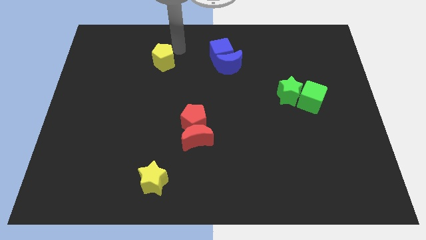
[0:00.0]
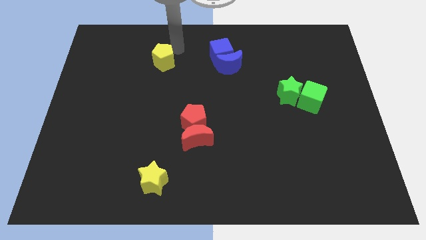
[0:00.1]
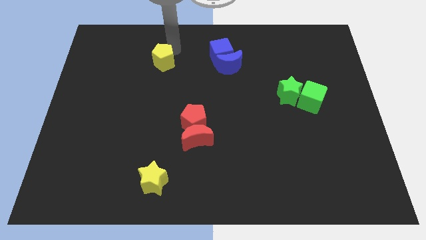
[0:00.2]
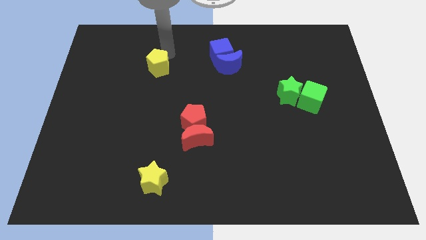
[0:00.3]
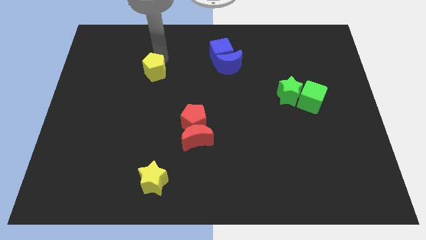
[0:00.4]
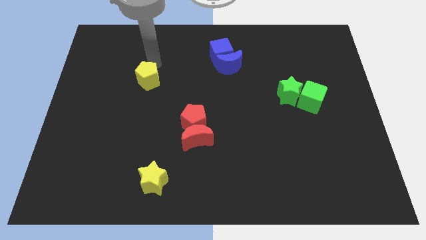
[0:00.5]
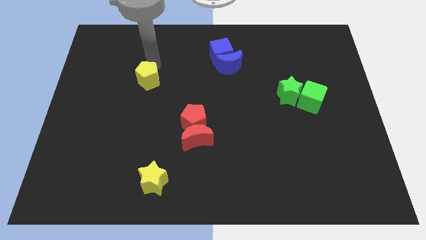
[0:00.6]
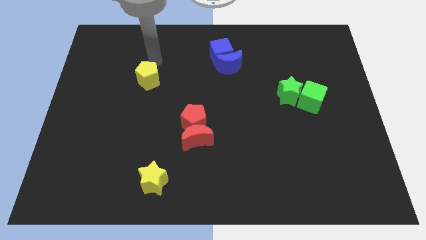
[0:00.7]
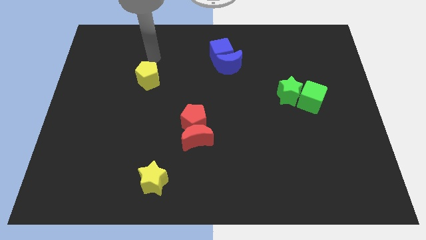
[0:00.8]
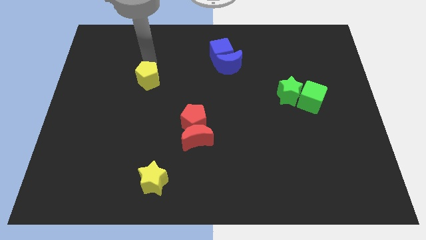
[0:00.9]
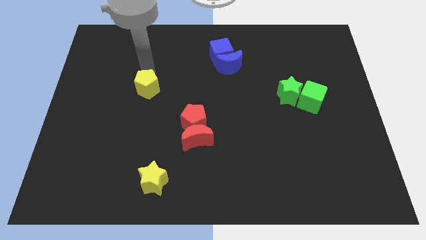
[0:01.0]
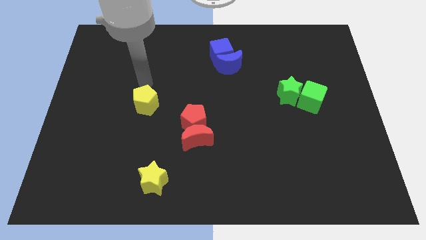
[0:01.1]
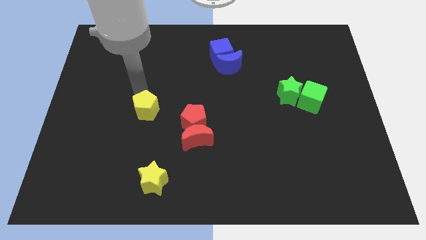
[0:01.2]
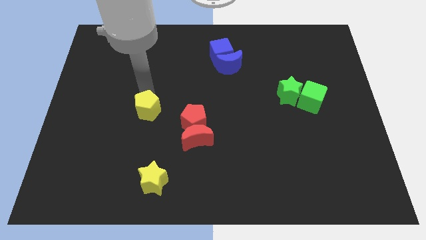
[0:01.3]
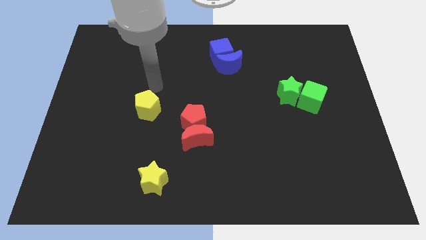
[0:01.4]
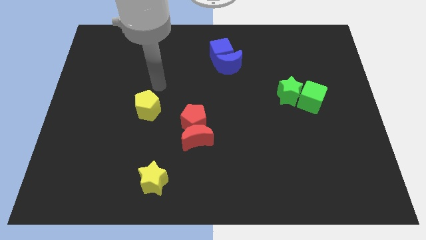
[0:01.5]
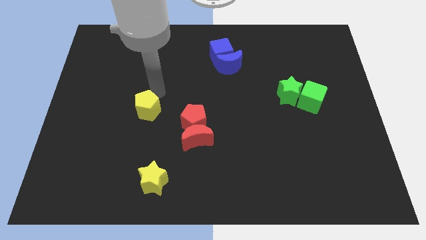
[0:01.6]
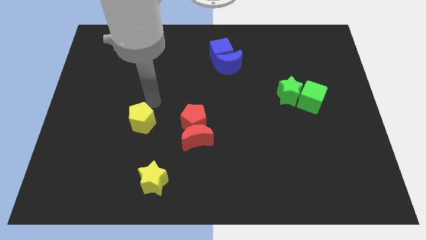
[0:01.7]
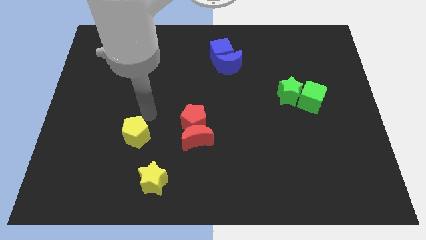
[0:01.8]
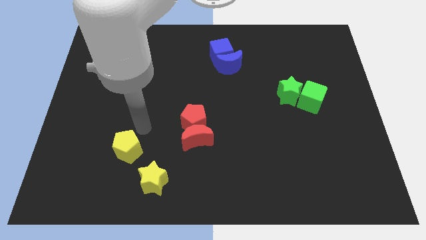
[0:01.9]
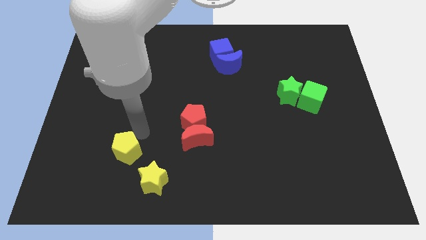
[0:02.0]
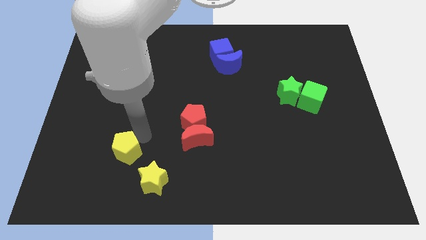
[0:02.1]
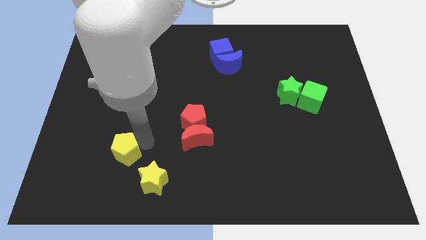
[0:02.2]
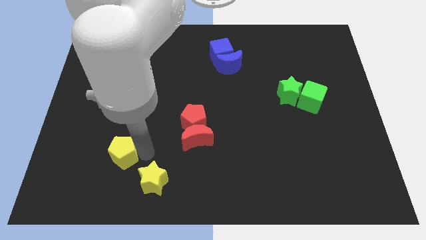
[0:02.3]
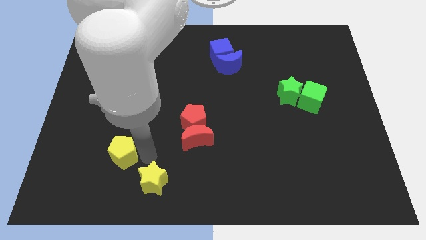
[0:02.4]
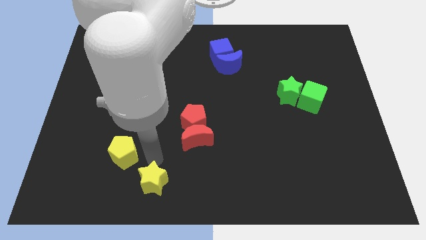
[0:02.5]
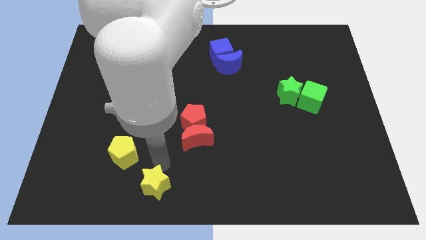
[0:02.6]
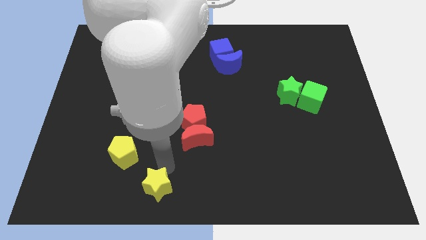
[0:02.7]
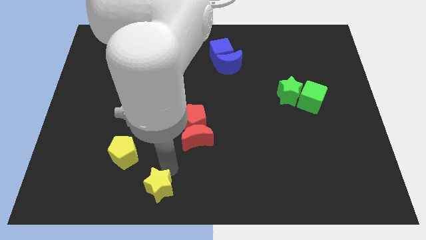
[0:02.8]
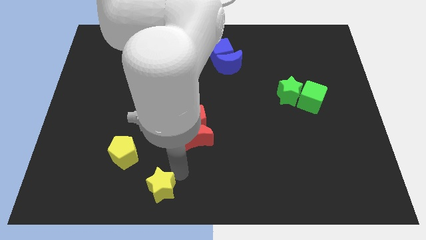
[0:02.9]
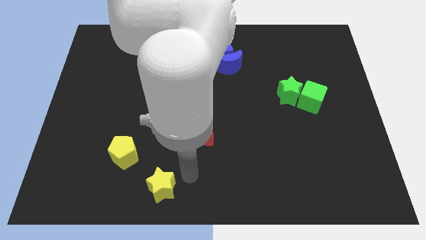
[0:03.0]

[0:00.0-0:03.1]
place the yellow pentagon to the top left of the yellow star

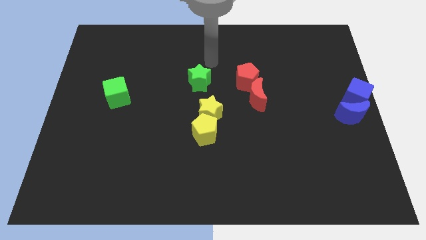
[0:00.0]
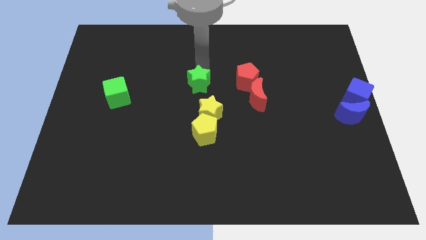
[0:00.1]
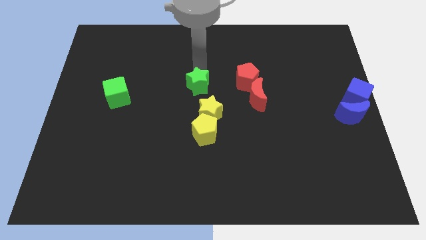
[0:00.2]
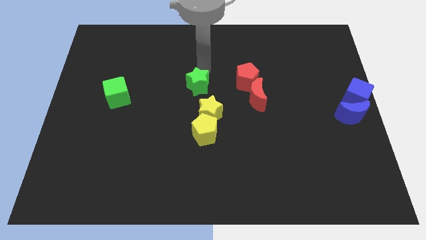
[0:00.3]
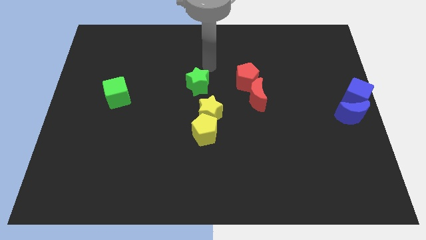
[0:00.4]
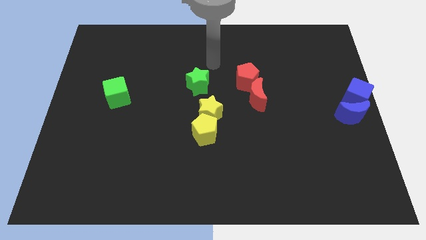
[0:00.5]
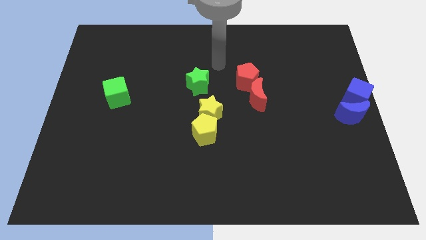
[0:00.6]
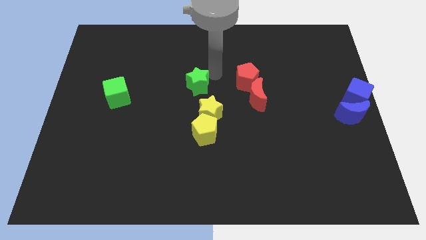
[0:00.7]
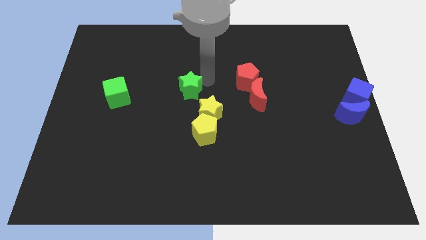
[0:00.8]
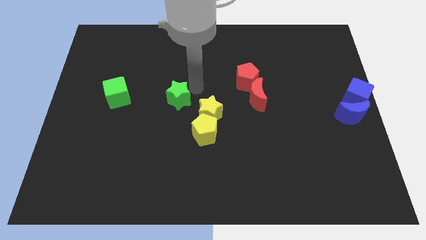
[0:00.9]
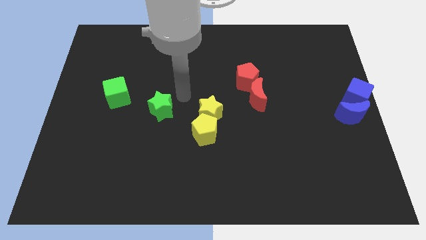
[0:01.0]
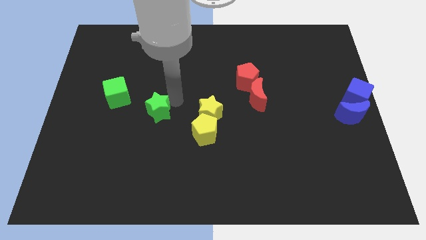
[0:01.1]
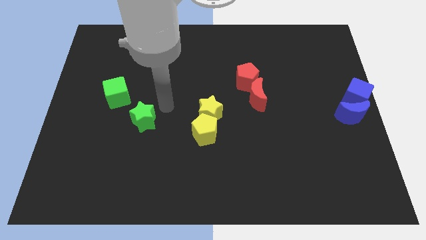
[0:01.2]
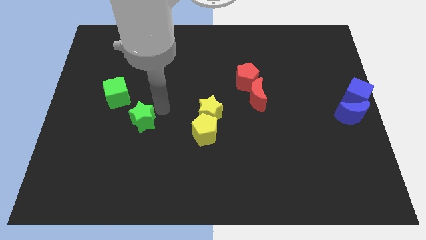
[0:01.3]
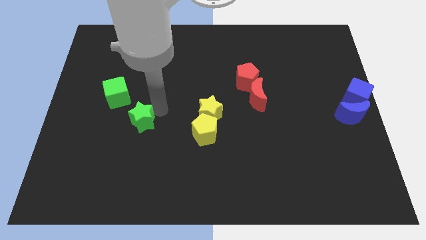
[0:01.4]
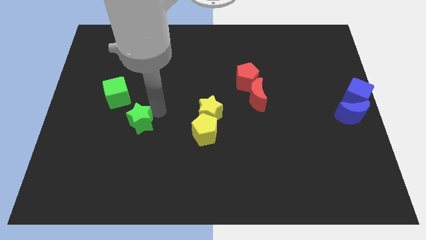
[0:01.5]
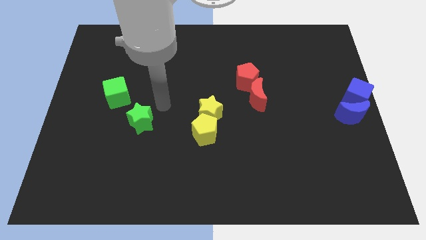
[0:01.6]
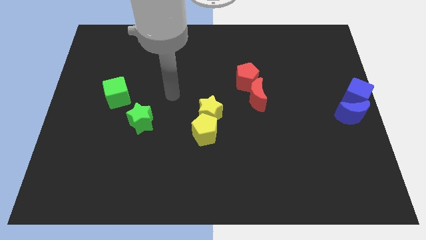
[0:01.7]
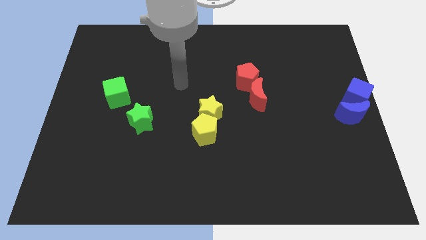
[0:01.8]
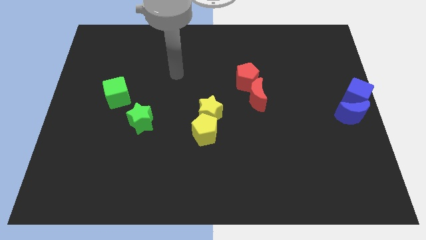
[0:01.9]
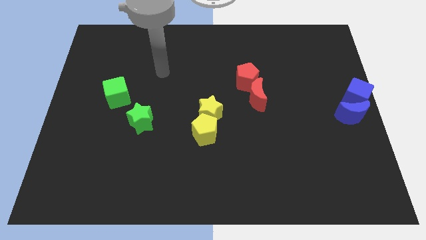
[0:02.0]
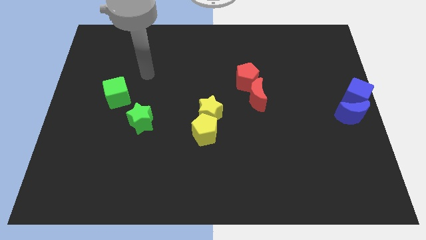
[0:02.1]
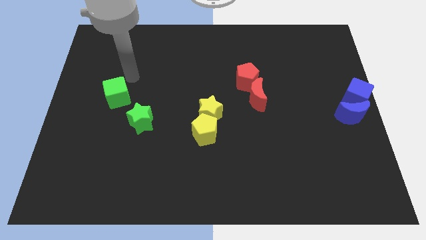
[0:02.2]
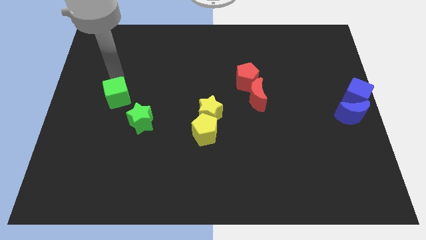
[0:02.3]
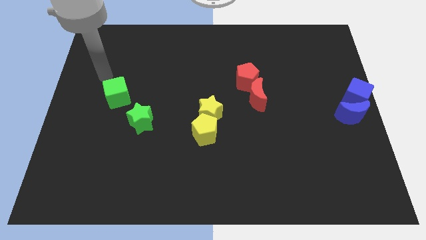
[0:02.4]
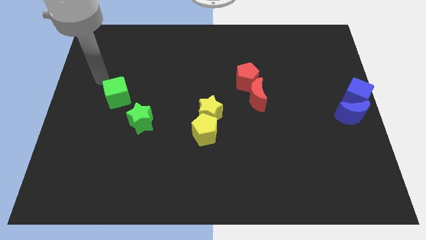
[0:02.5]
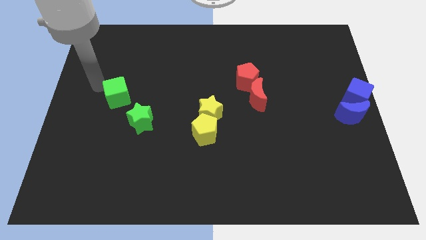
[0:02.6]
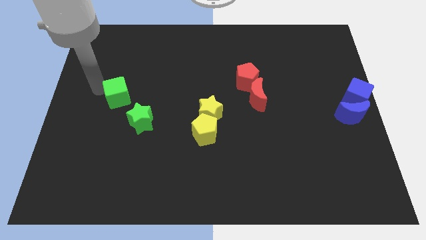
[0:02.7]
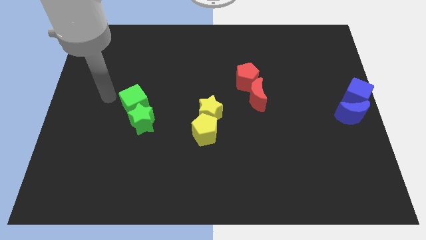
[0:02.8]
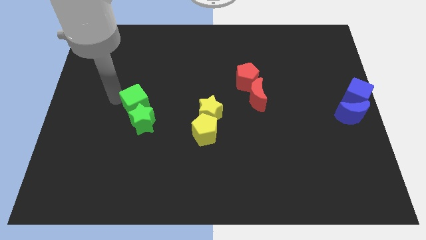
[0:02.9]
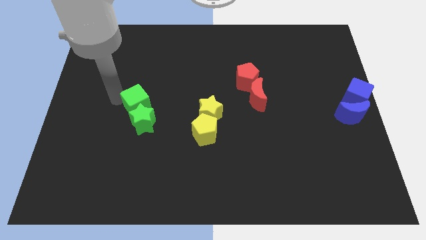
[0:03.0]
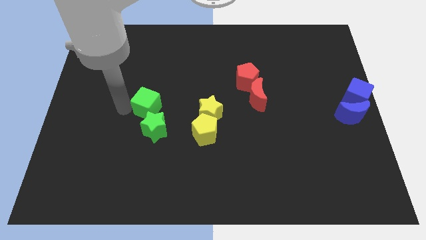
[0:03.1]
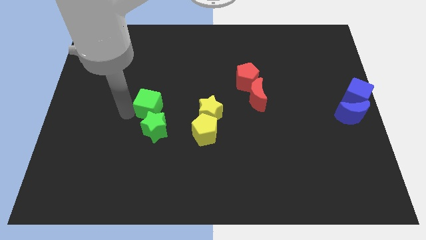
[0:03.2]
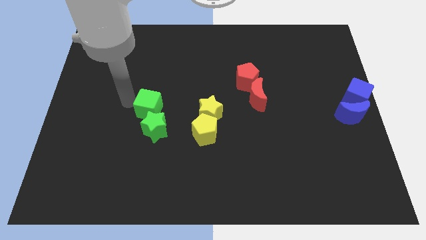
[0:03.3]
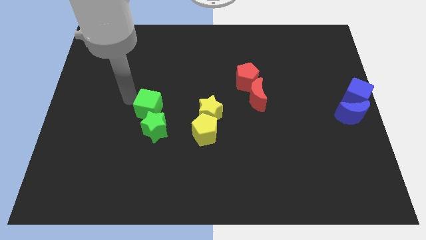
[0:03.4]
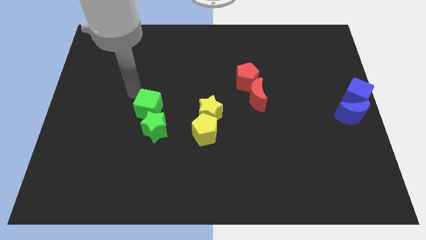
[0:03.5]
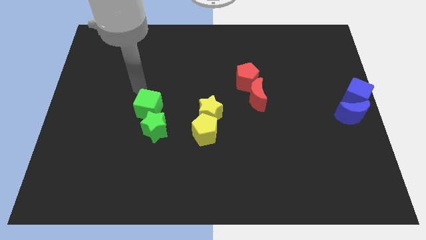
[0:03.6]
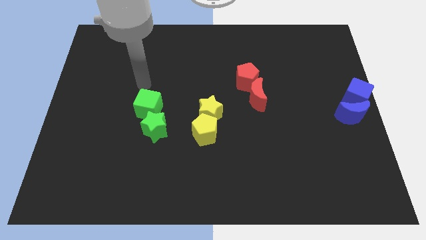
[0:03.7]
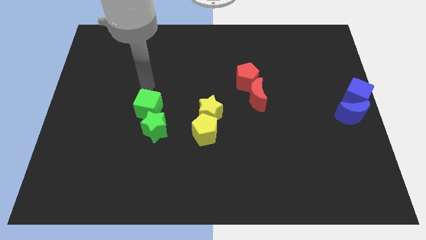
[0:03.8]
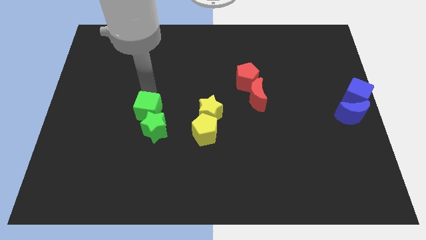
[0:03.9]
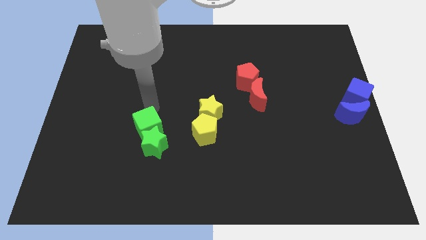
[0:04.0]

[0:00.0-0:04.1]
move the green blocks to the left of yellow blocks

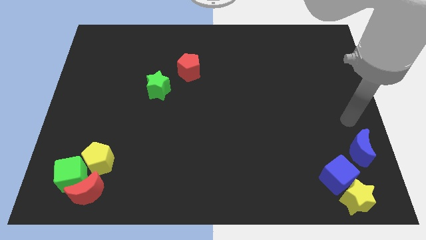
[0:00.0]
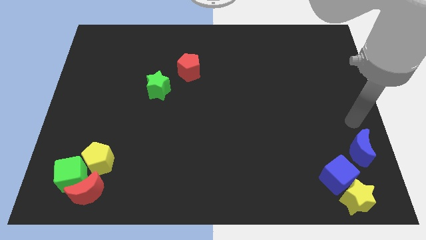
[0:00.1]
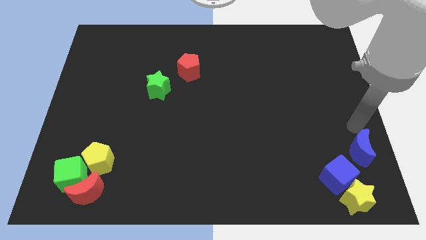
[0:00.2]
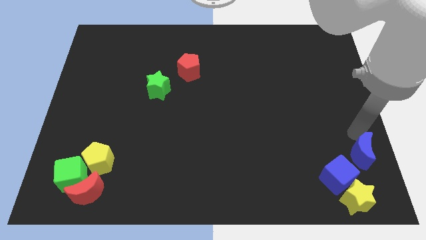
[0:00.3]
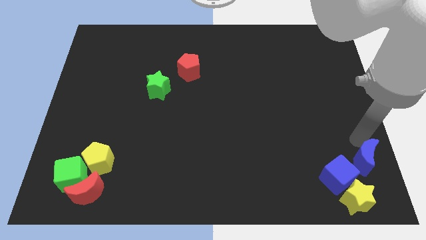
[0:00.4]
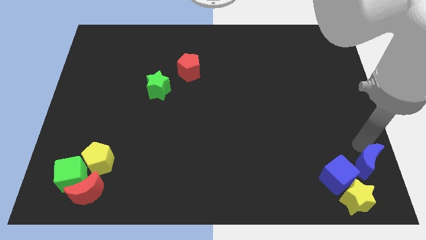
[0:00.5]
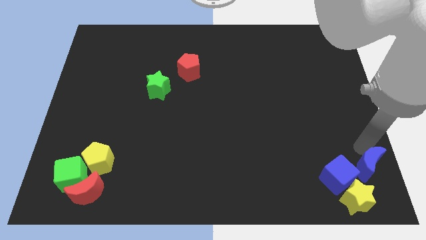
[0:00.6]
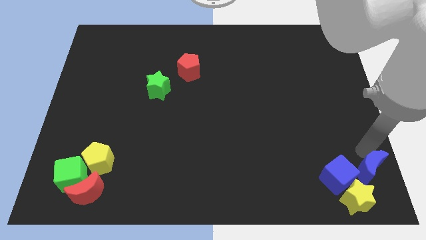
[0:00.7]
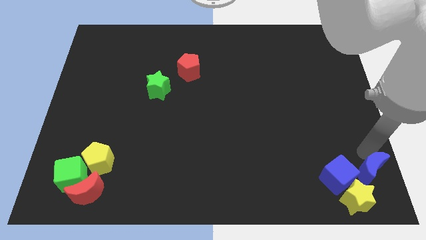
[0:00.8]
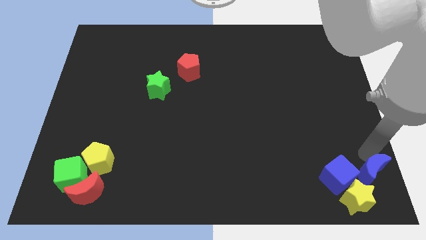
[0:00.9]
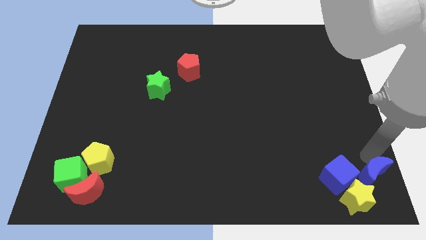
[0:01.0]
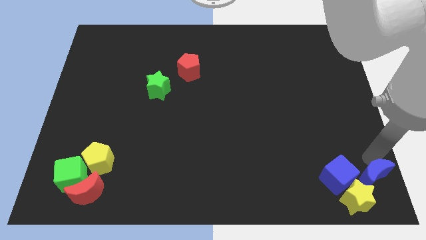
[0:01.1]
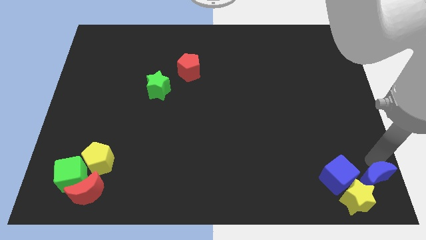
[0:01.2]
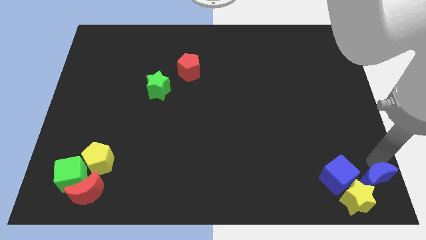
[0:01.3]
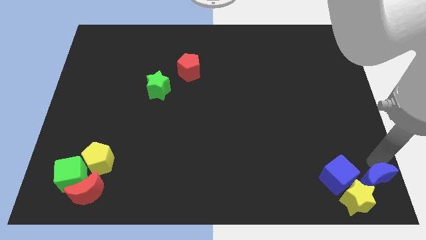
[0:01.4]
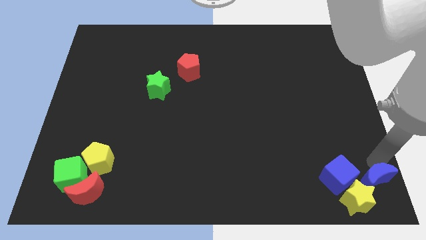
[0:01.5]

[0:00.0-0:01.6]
make the blue crescent to touch the yellow star

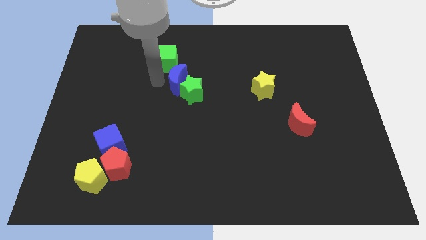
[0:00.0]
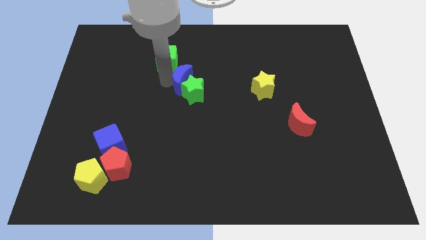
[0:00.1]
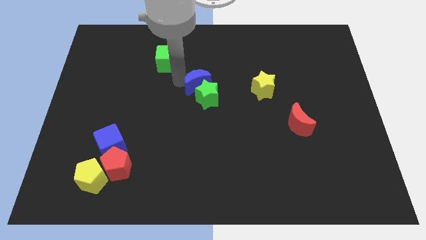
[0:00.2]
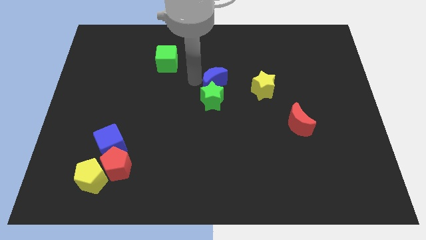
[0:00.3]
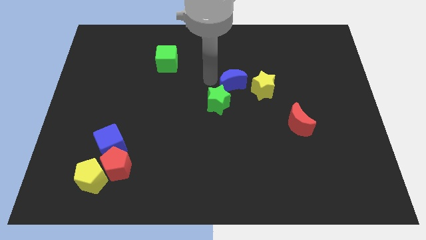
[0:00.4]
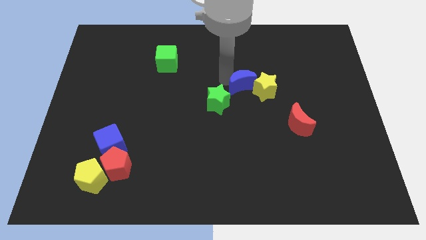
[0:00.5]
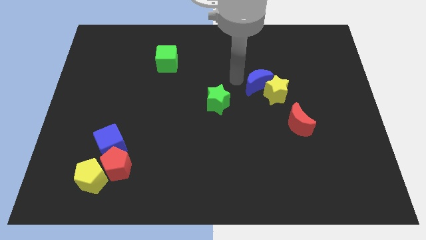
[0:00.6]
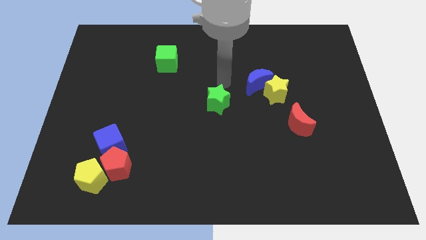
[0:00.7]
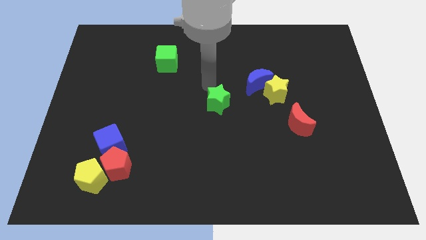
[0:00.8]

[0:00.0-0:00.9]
put blue crescent and yellow star together
